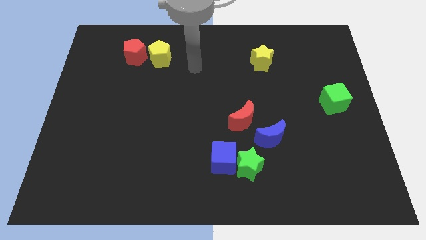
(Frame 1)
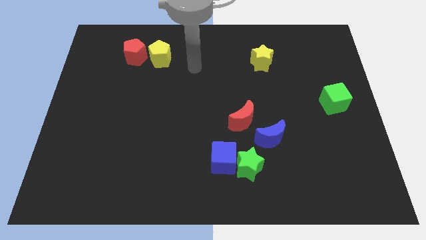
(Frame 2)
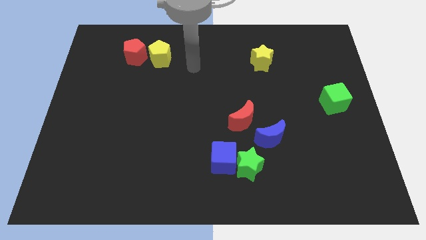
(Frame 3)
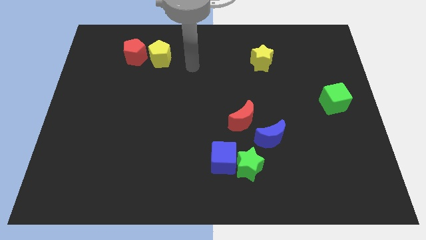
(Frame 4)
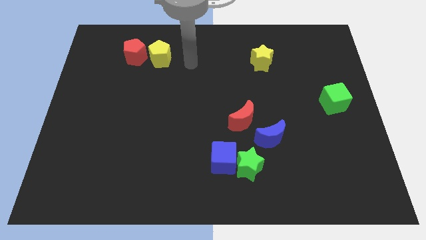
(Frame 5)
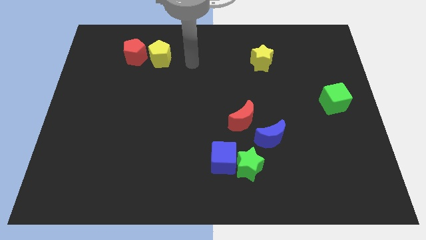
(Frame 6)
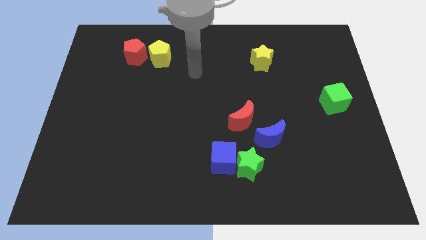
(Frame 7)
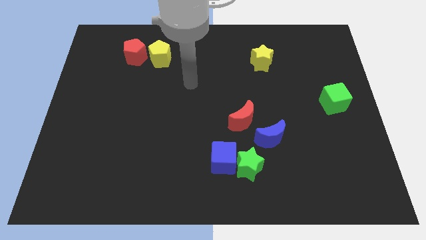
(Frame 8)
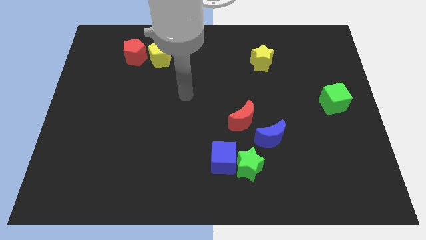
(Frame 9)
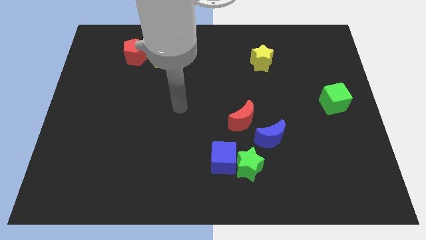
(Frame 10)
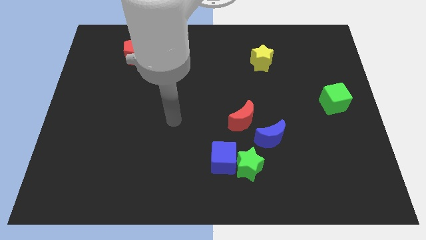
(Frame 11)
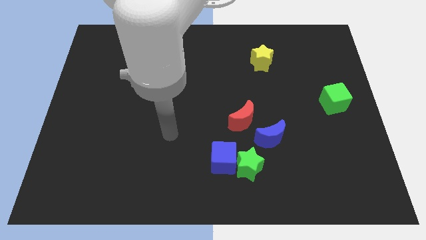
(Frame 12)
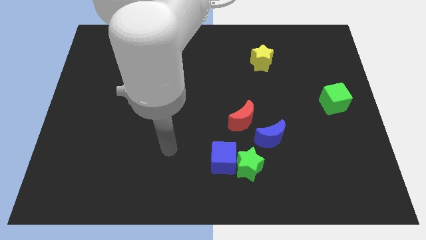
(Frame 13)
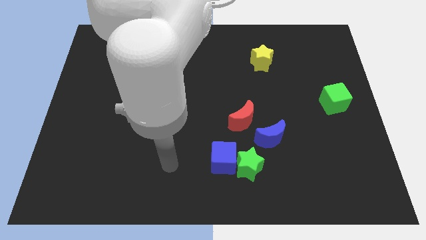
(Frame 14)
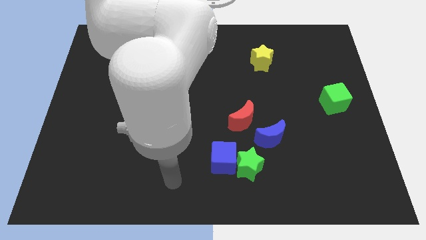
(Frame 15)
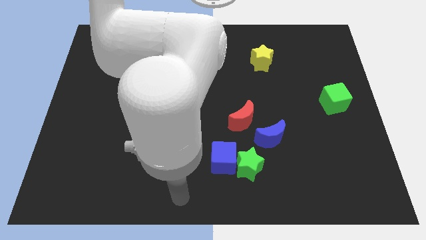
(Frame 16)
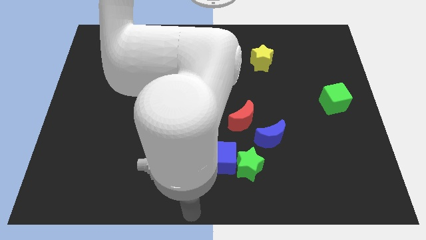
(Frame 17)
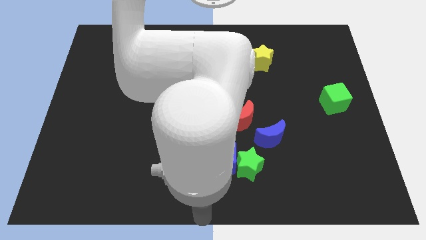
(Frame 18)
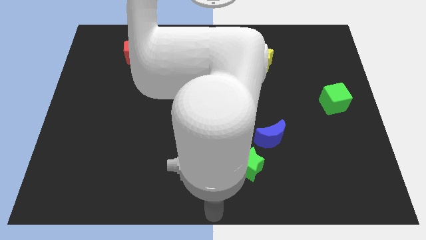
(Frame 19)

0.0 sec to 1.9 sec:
place the arm at the bottom center of the board

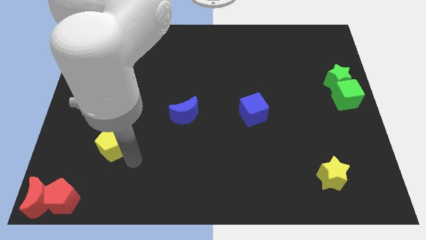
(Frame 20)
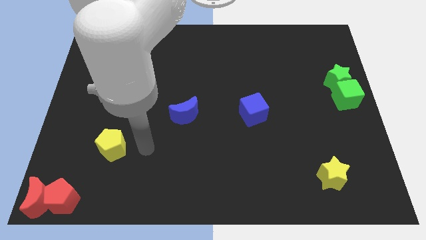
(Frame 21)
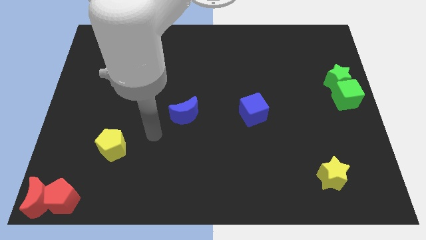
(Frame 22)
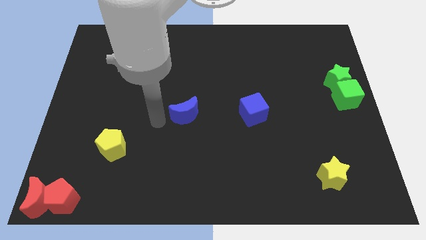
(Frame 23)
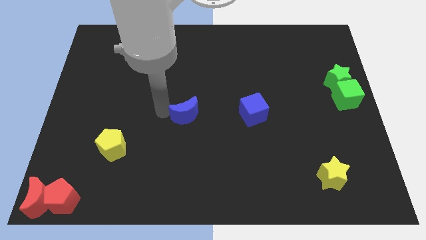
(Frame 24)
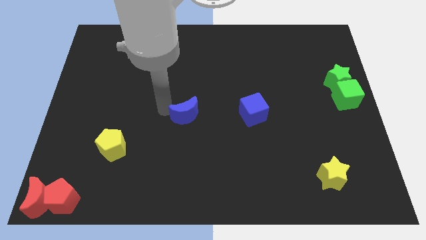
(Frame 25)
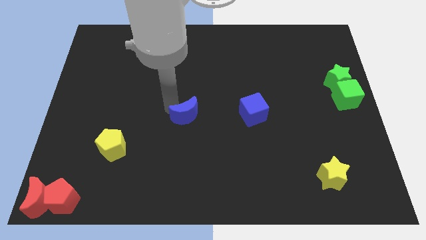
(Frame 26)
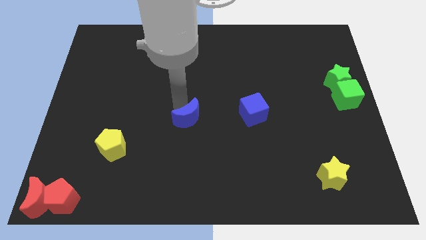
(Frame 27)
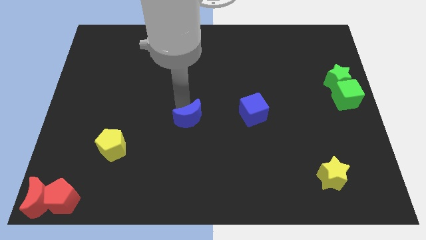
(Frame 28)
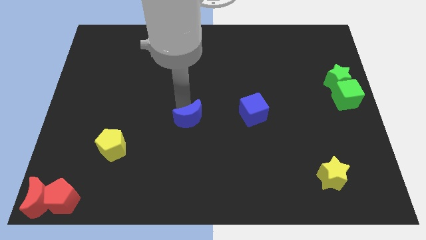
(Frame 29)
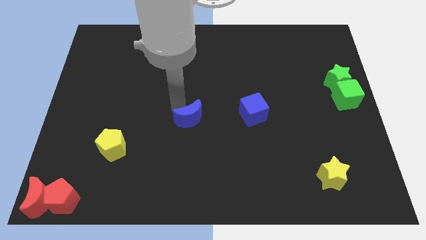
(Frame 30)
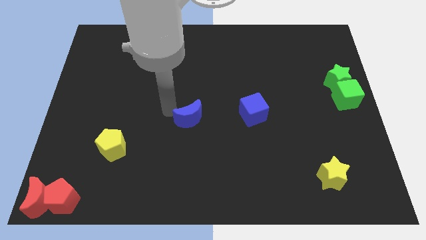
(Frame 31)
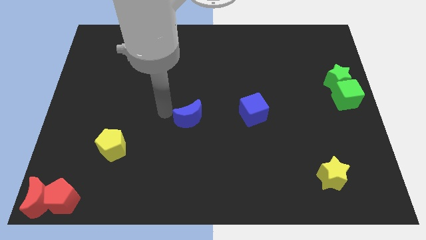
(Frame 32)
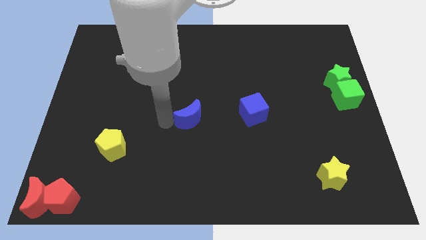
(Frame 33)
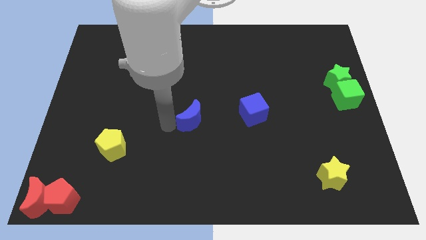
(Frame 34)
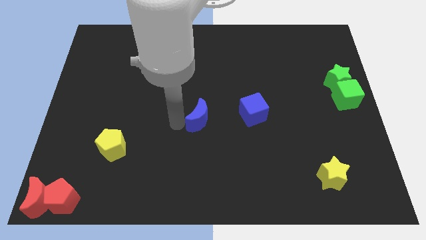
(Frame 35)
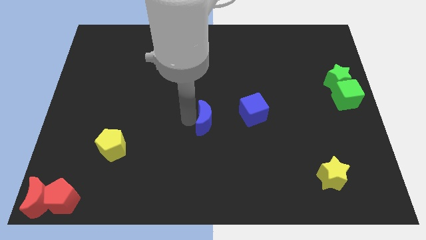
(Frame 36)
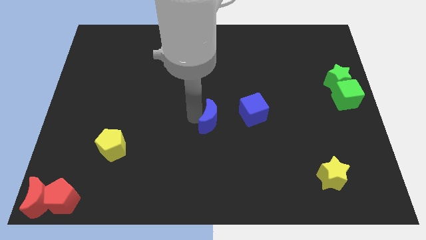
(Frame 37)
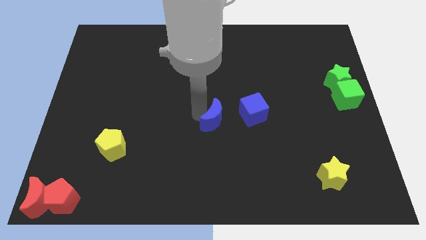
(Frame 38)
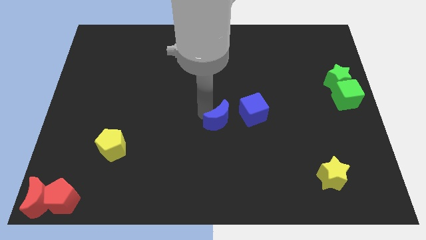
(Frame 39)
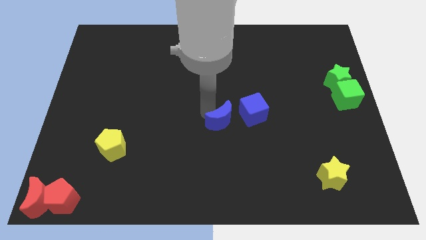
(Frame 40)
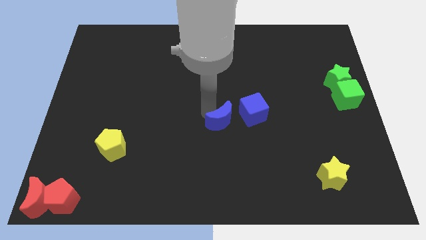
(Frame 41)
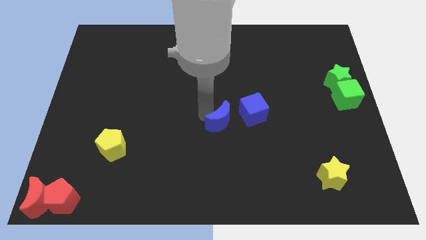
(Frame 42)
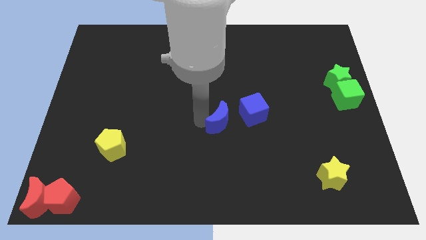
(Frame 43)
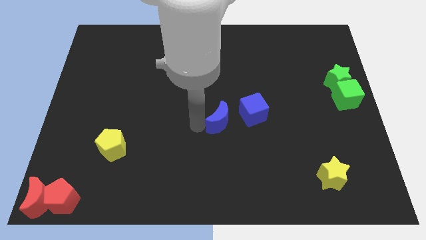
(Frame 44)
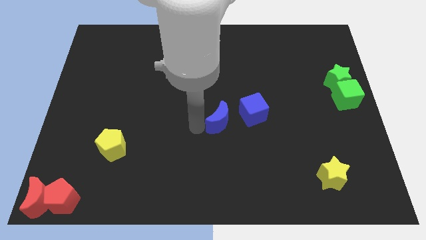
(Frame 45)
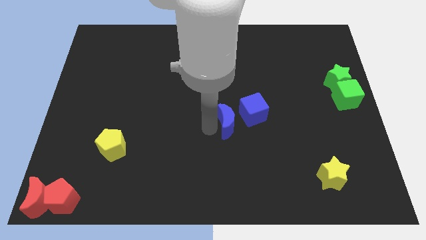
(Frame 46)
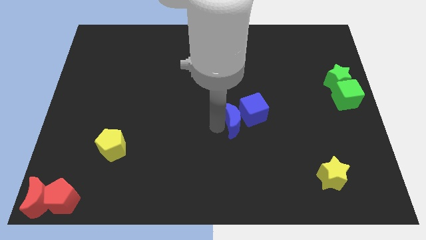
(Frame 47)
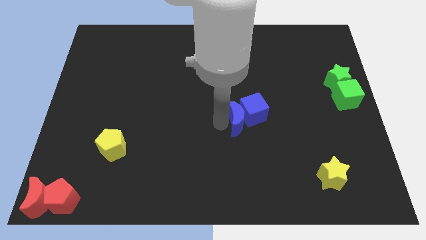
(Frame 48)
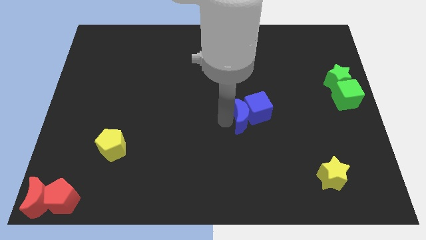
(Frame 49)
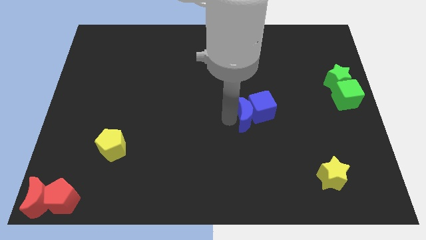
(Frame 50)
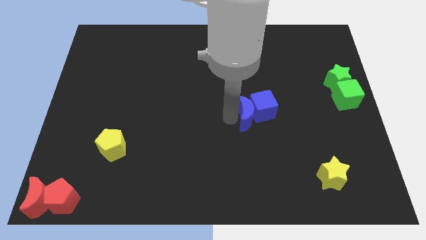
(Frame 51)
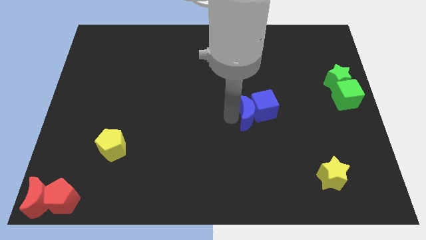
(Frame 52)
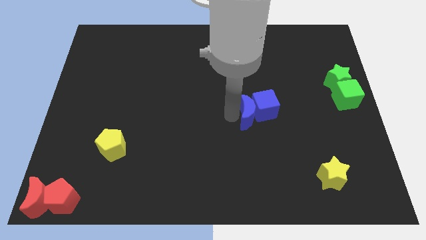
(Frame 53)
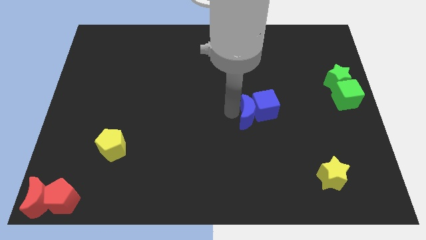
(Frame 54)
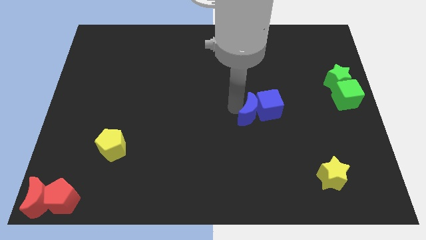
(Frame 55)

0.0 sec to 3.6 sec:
move the blue crescent into the blue cube

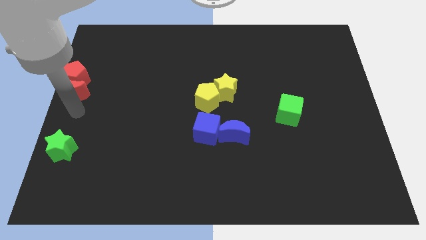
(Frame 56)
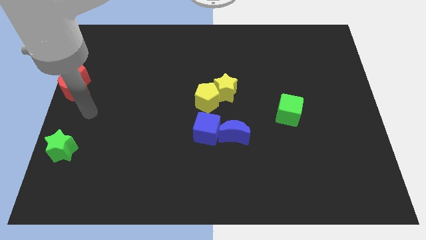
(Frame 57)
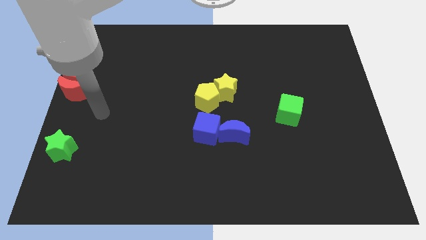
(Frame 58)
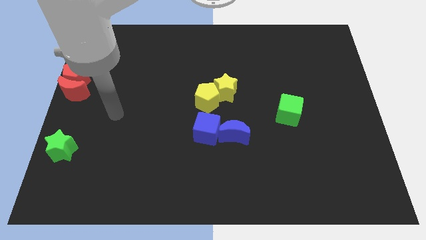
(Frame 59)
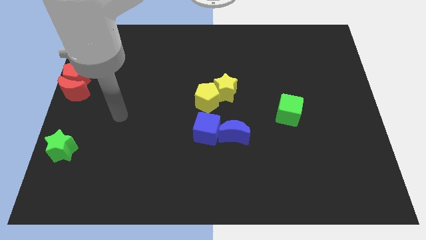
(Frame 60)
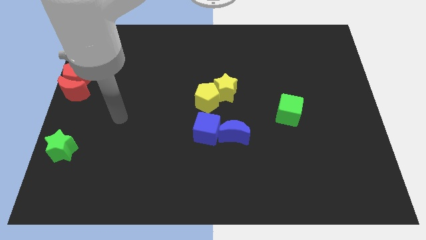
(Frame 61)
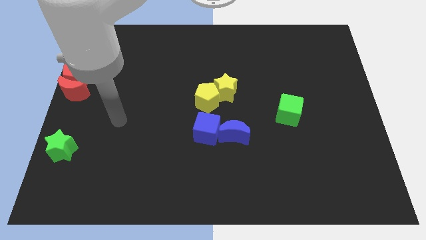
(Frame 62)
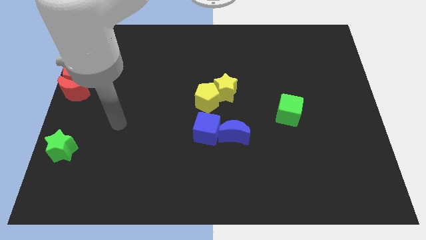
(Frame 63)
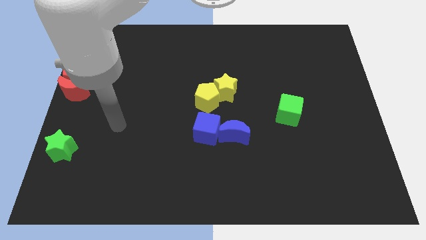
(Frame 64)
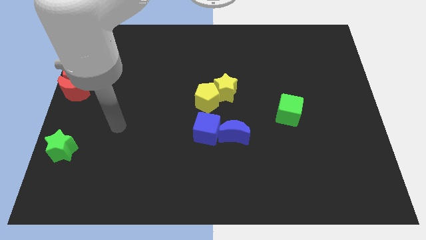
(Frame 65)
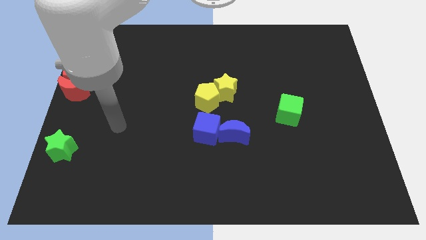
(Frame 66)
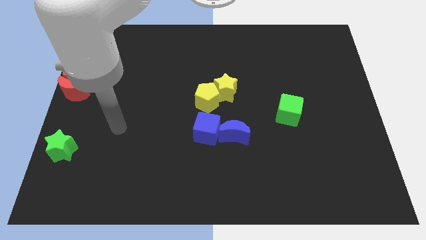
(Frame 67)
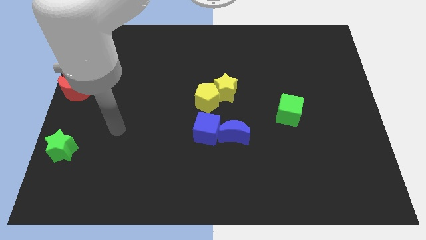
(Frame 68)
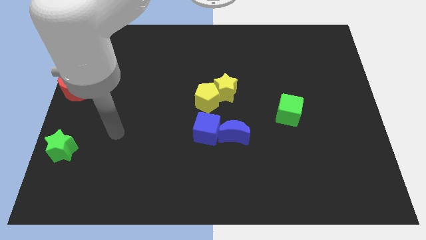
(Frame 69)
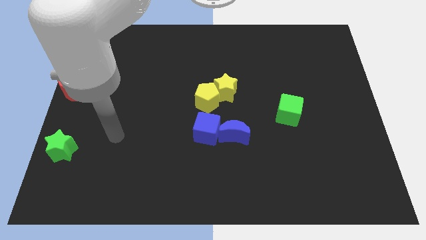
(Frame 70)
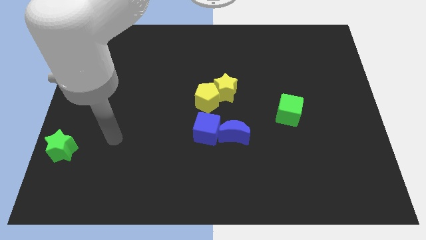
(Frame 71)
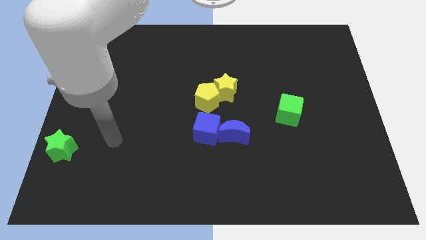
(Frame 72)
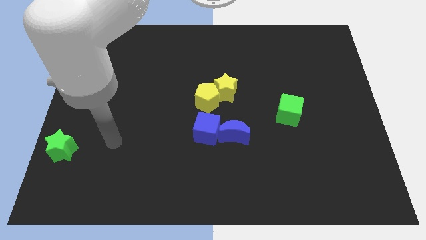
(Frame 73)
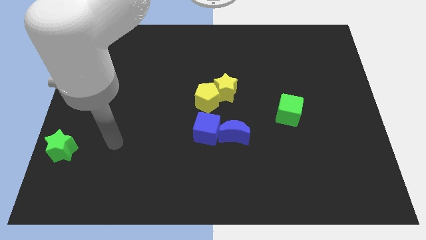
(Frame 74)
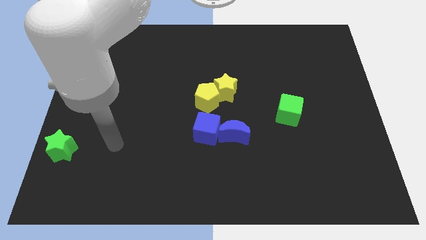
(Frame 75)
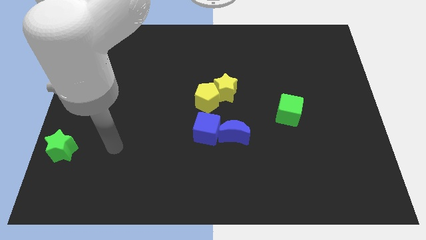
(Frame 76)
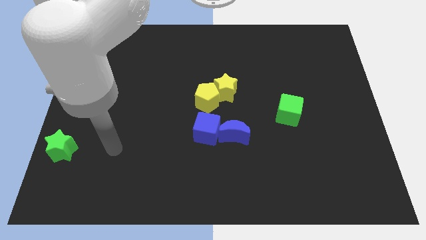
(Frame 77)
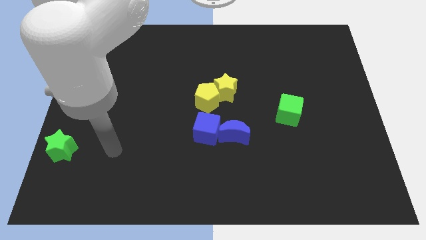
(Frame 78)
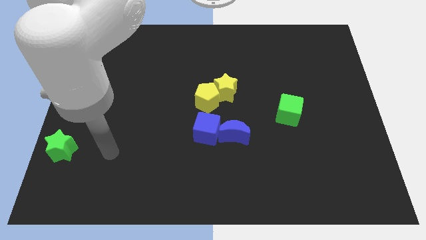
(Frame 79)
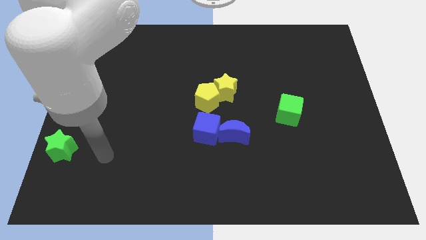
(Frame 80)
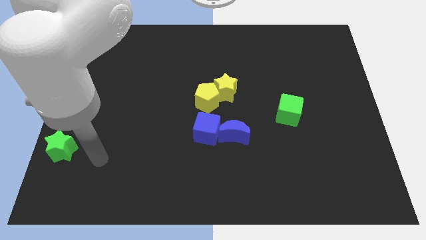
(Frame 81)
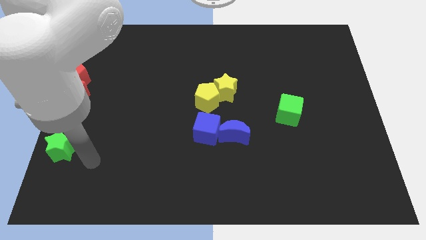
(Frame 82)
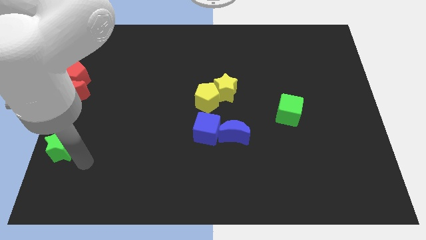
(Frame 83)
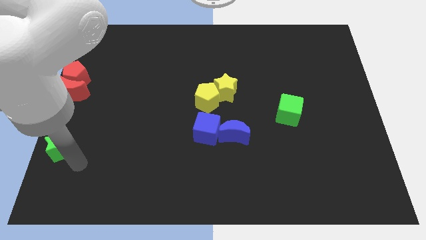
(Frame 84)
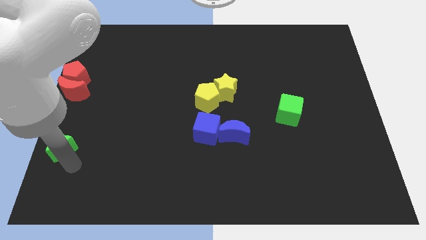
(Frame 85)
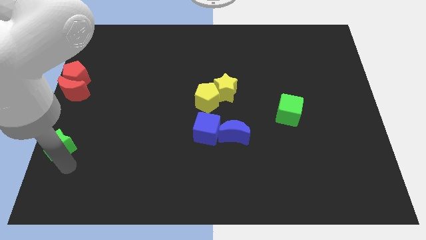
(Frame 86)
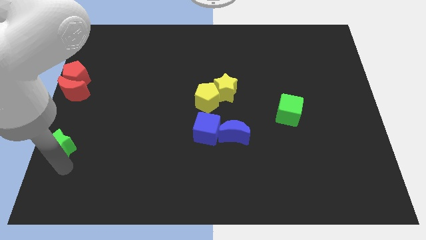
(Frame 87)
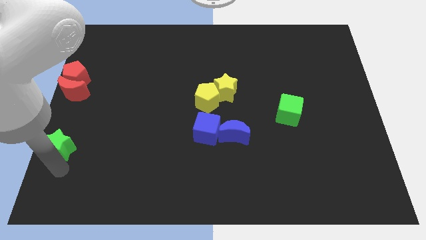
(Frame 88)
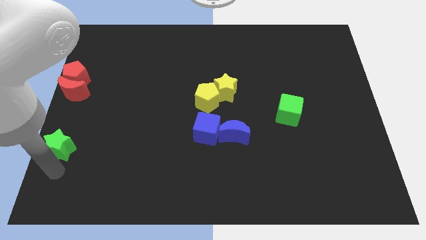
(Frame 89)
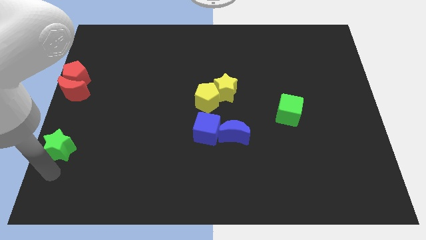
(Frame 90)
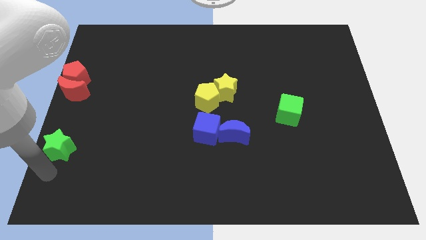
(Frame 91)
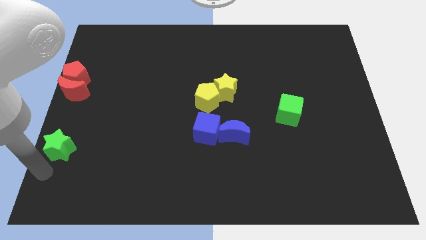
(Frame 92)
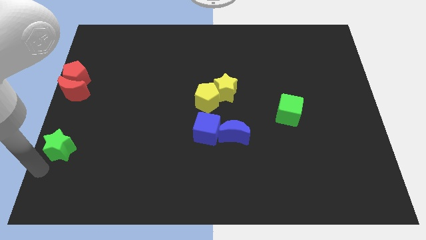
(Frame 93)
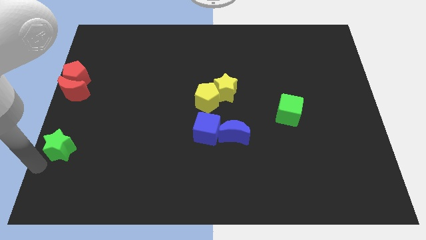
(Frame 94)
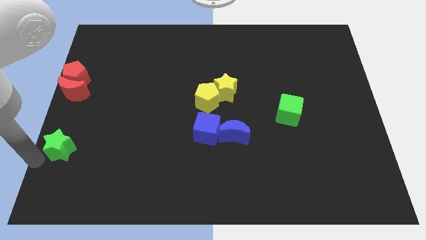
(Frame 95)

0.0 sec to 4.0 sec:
move your arm to the bottom of the green star
